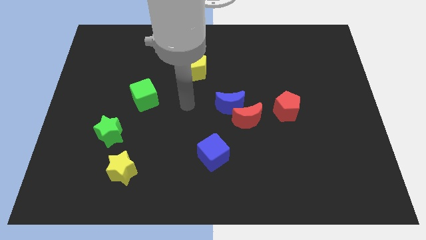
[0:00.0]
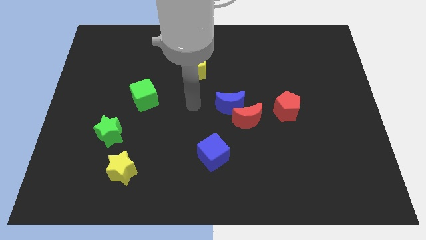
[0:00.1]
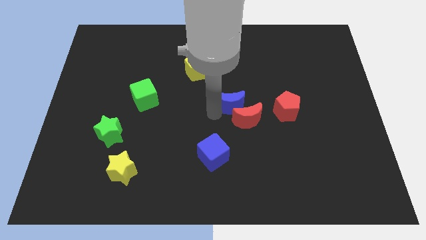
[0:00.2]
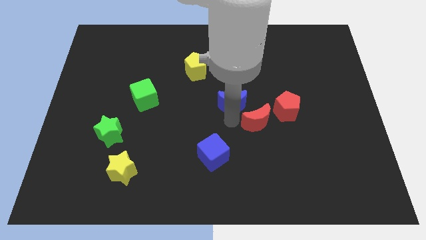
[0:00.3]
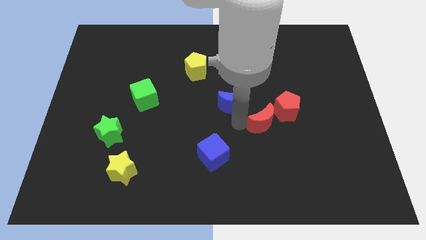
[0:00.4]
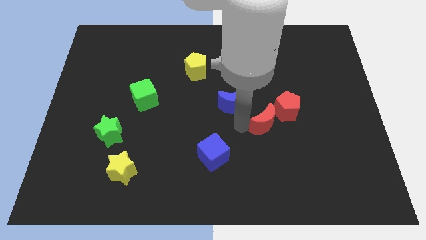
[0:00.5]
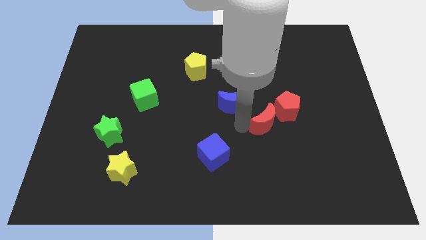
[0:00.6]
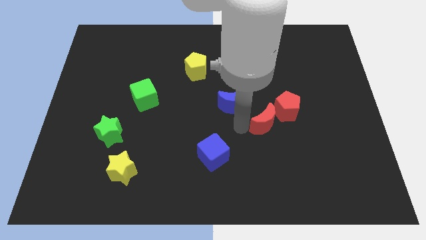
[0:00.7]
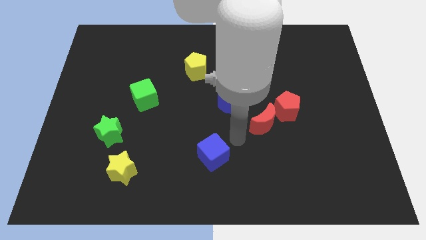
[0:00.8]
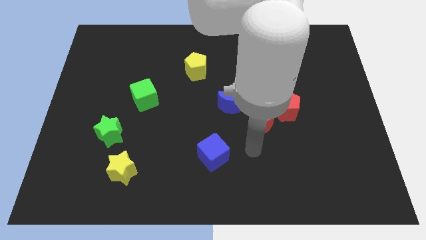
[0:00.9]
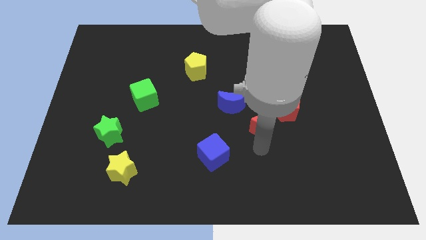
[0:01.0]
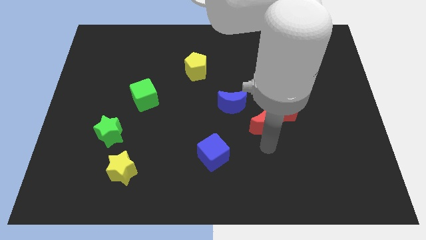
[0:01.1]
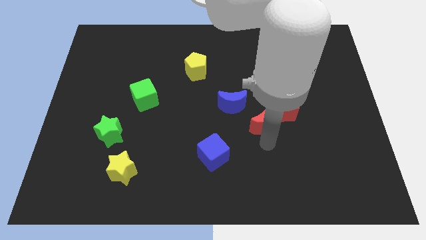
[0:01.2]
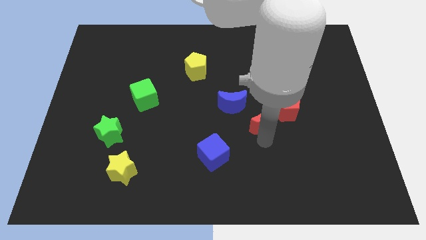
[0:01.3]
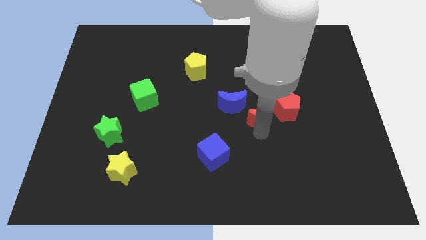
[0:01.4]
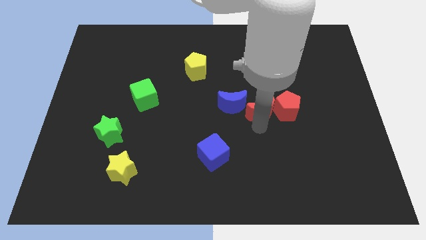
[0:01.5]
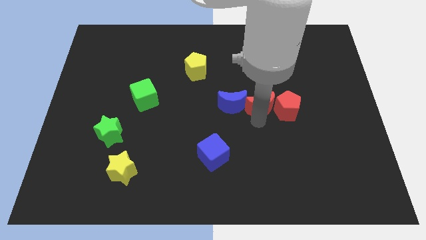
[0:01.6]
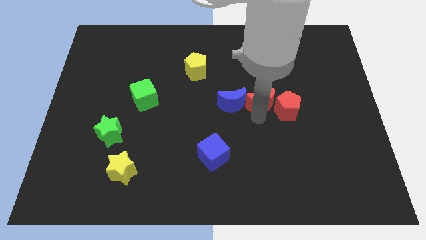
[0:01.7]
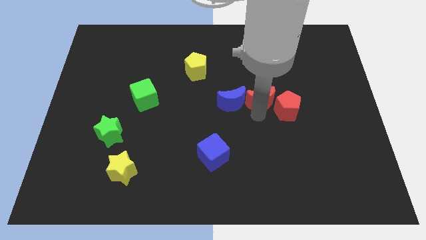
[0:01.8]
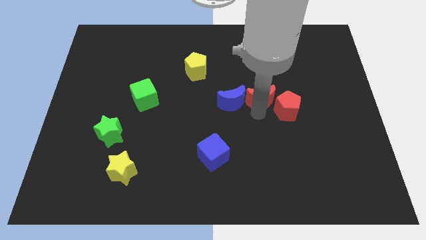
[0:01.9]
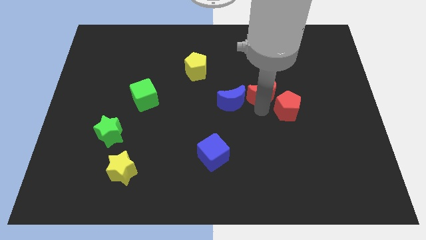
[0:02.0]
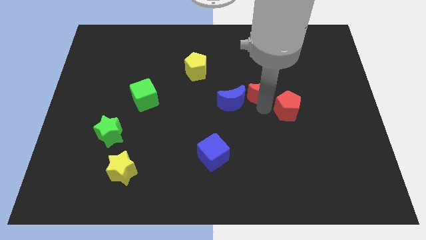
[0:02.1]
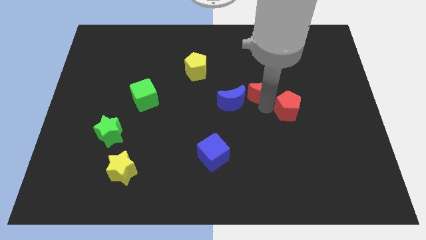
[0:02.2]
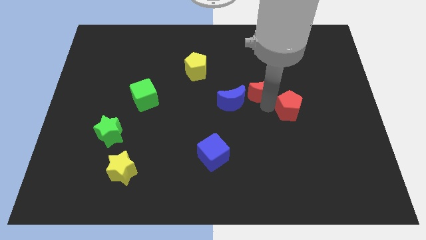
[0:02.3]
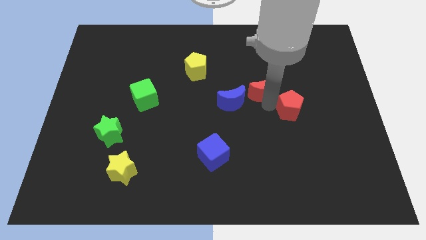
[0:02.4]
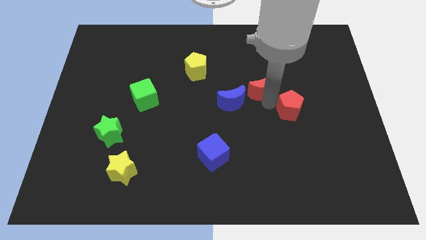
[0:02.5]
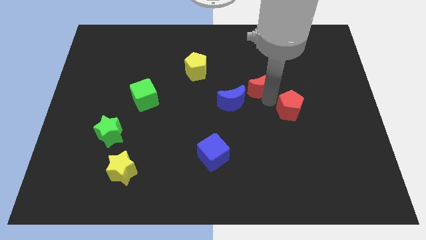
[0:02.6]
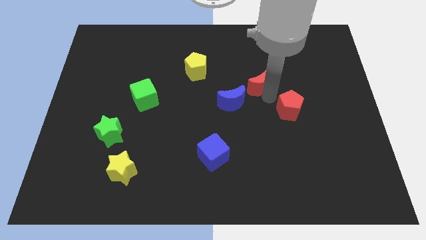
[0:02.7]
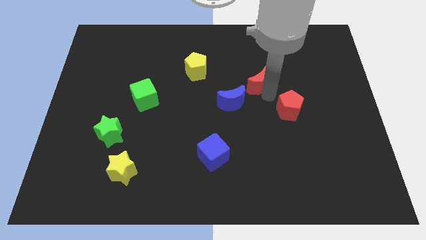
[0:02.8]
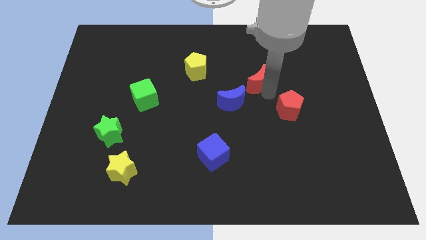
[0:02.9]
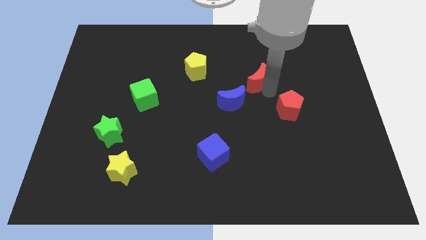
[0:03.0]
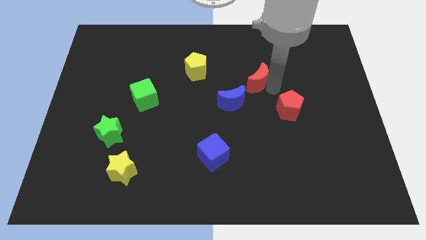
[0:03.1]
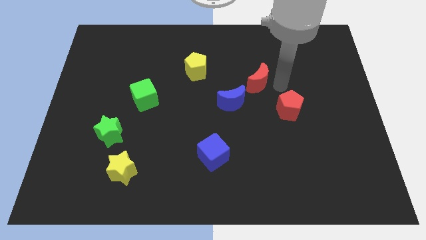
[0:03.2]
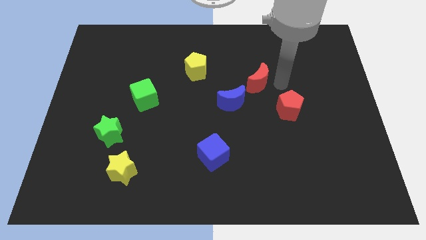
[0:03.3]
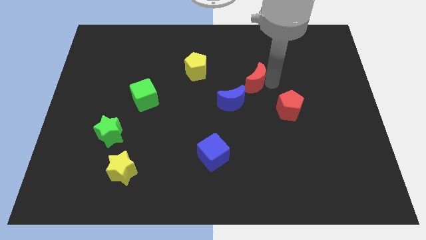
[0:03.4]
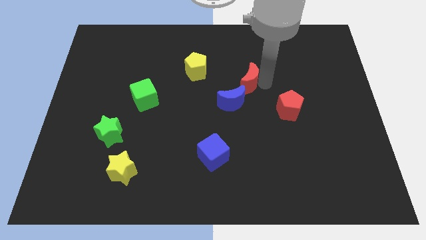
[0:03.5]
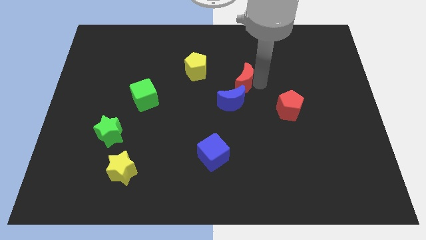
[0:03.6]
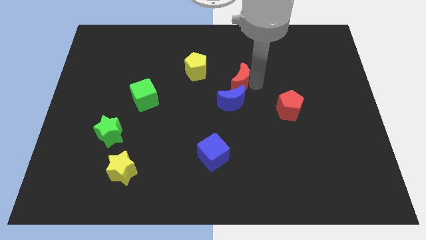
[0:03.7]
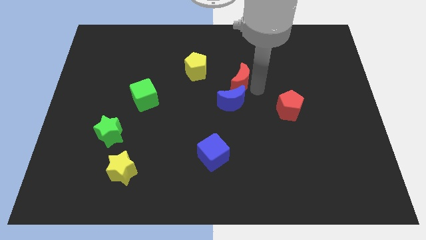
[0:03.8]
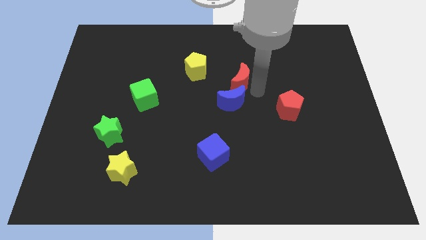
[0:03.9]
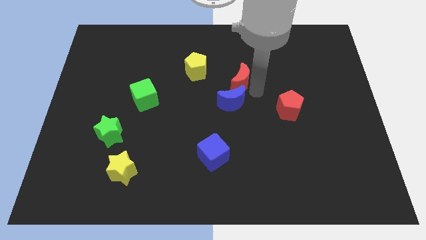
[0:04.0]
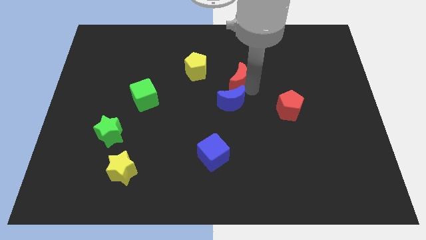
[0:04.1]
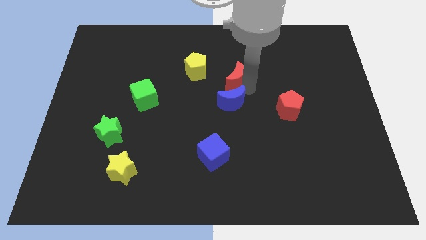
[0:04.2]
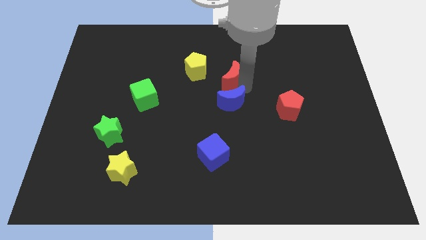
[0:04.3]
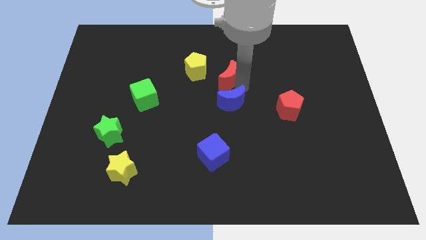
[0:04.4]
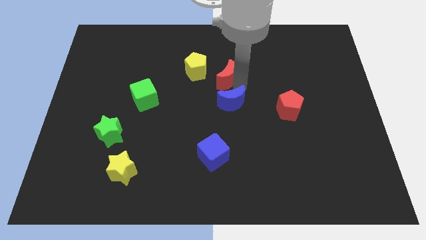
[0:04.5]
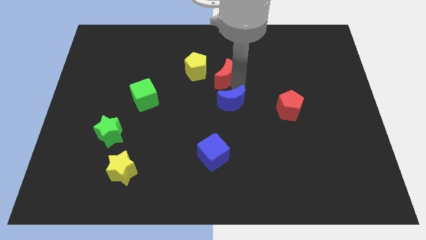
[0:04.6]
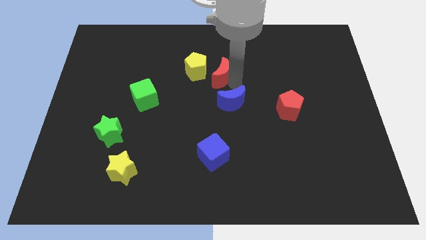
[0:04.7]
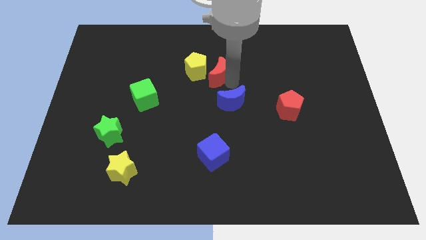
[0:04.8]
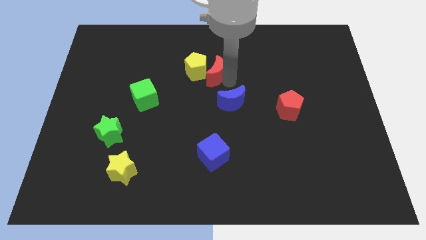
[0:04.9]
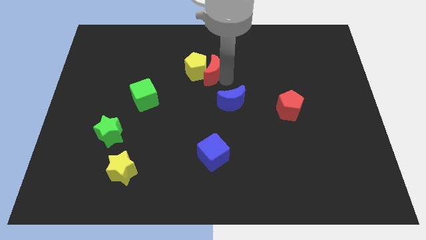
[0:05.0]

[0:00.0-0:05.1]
push the red moon close to the yellow pentagon

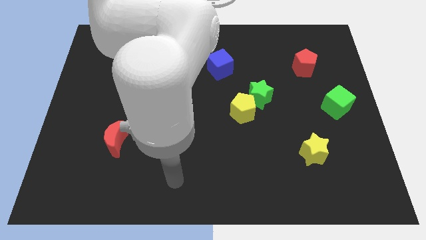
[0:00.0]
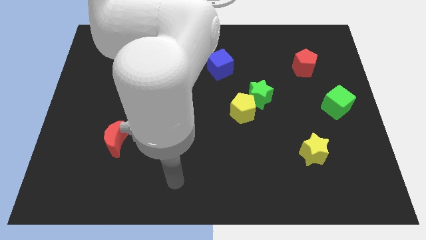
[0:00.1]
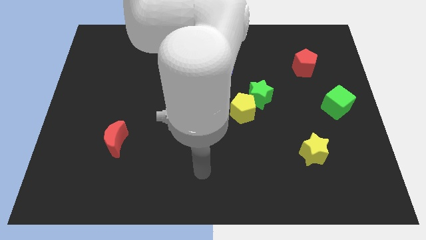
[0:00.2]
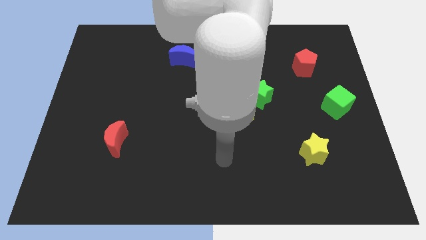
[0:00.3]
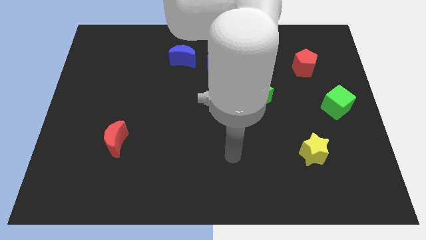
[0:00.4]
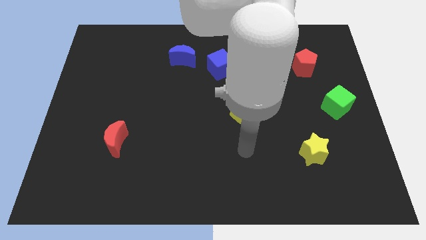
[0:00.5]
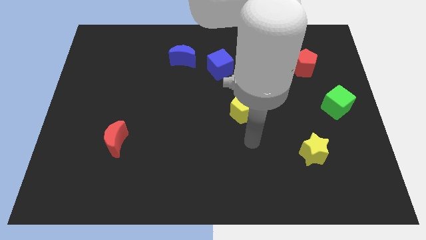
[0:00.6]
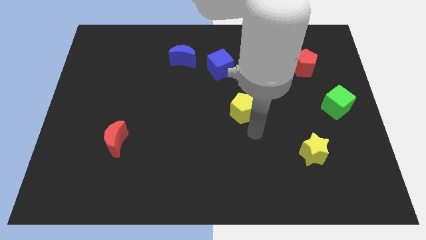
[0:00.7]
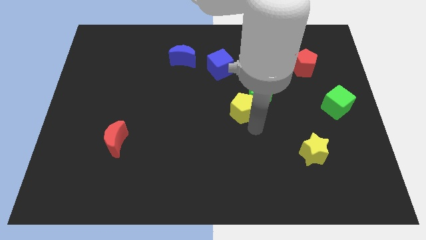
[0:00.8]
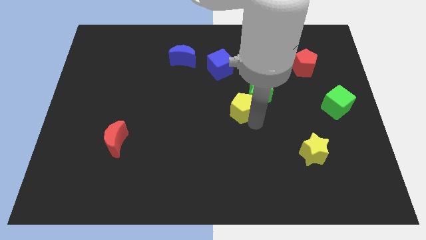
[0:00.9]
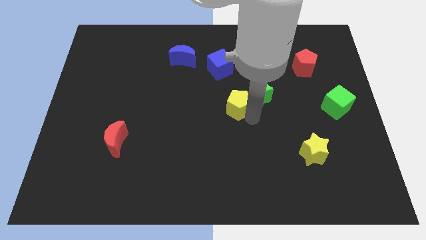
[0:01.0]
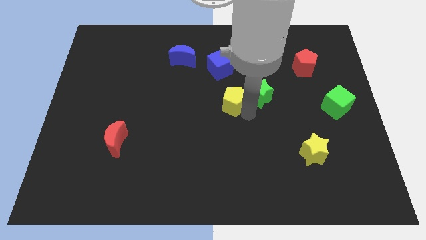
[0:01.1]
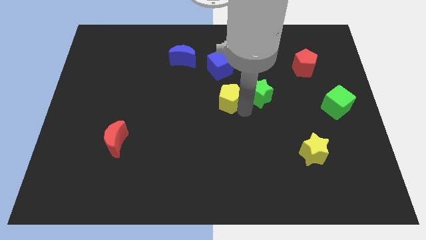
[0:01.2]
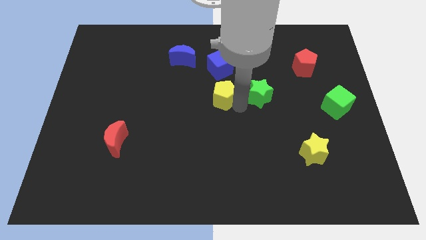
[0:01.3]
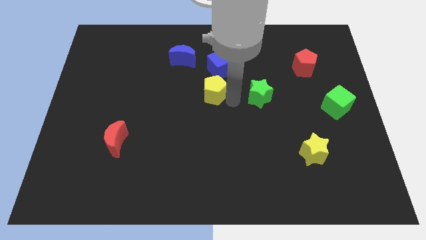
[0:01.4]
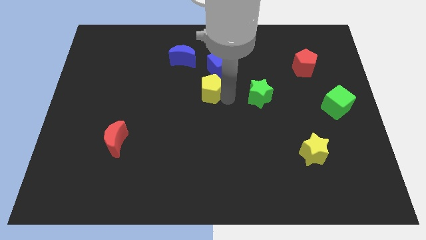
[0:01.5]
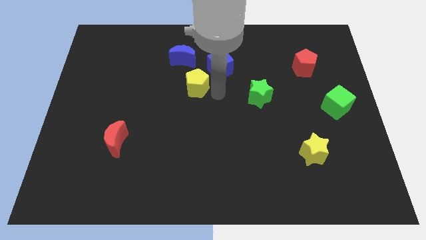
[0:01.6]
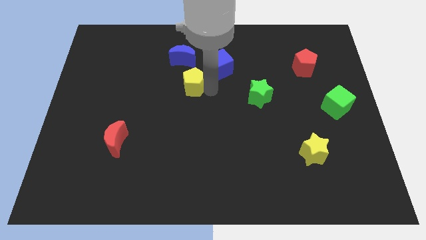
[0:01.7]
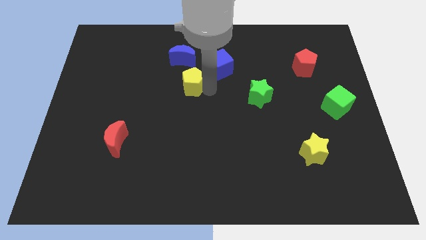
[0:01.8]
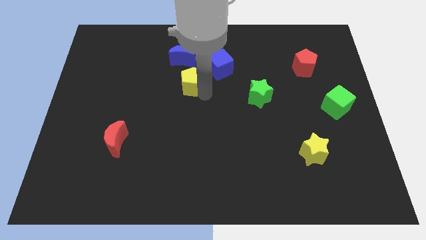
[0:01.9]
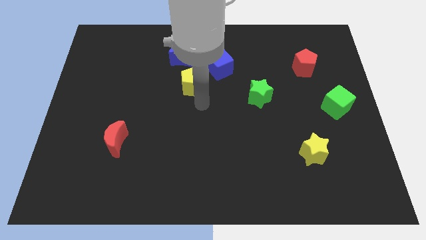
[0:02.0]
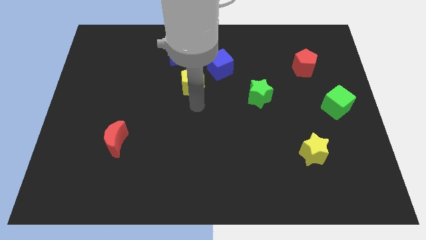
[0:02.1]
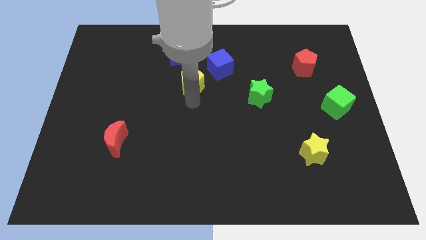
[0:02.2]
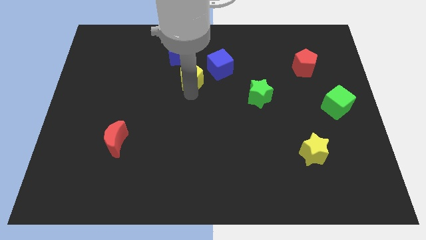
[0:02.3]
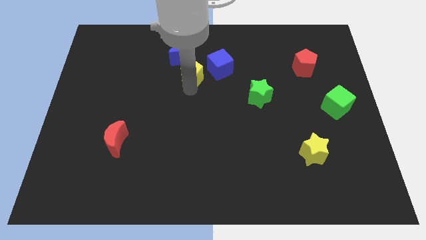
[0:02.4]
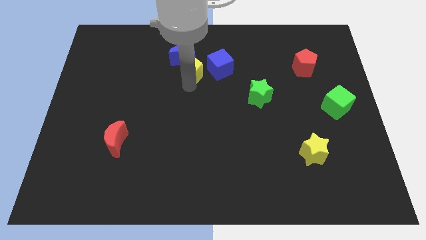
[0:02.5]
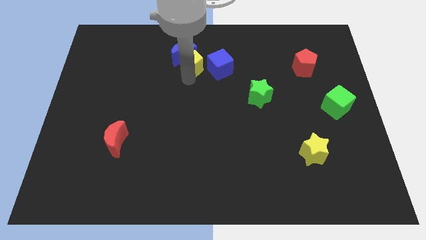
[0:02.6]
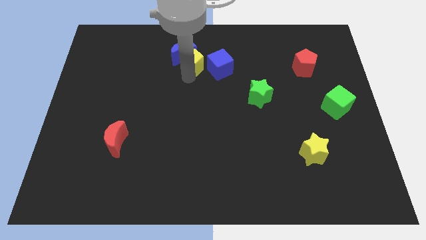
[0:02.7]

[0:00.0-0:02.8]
push the yellow pentagon next to the blue moon

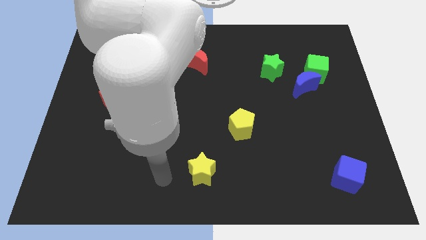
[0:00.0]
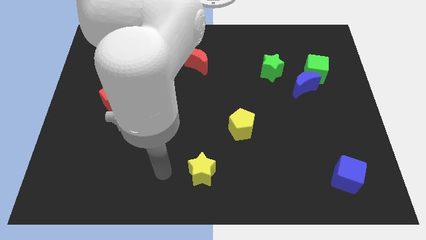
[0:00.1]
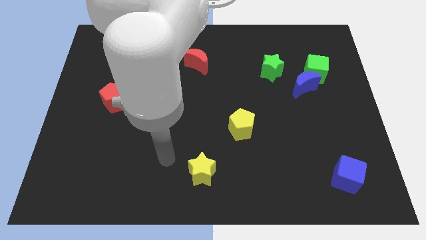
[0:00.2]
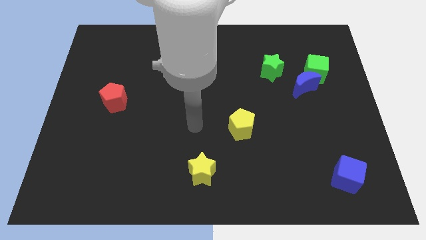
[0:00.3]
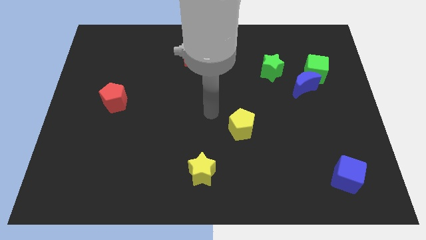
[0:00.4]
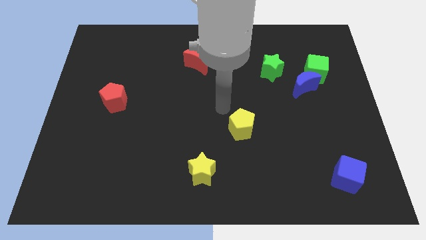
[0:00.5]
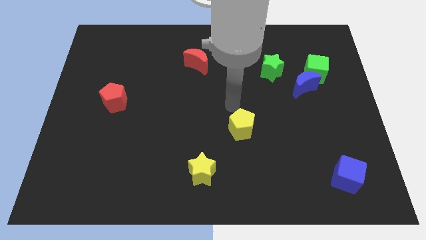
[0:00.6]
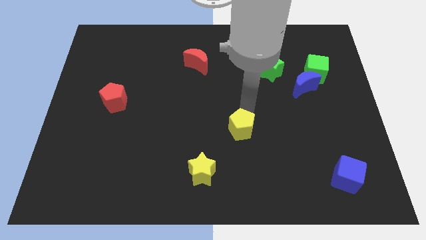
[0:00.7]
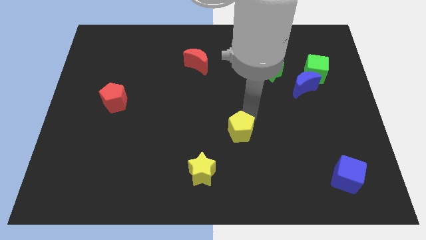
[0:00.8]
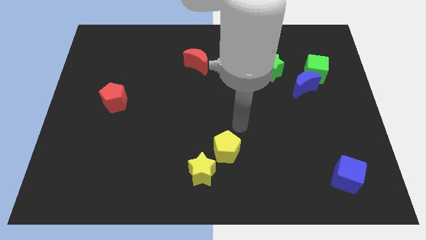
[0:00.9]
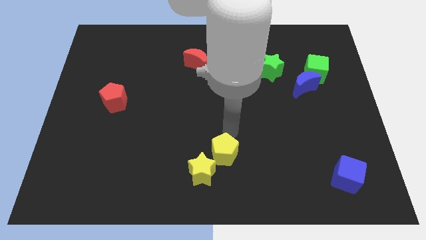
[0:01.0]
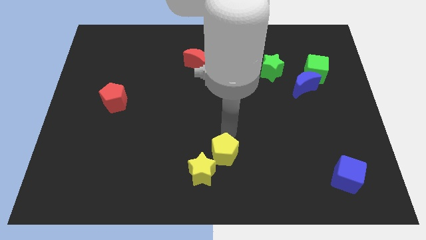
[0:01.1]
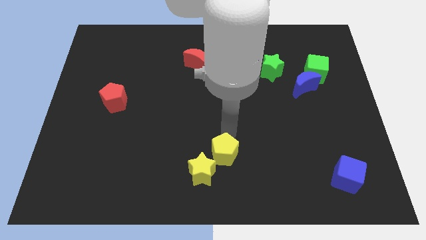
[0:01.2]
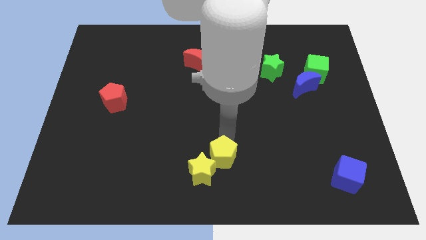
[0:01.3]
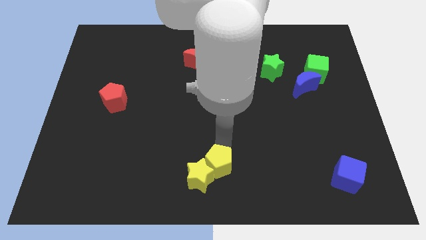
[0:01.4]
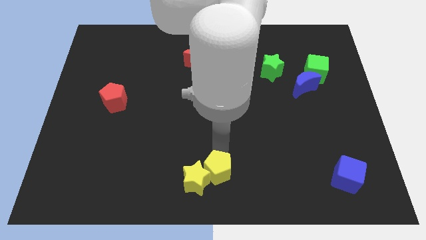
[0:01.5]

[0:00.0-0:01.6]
put the yellow pentagon to the yellow star
